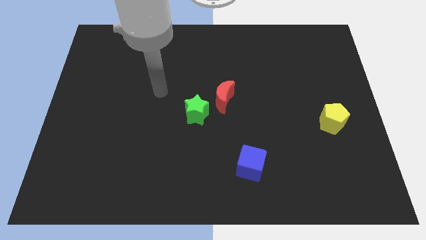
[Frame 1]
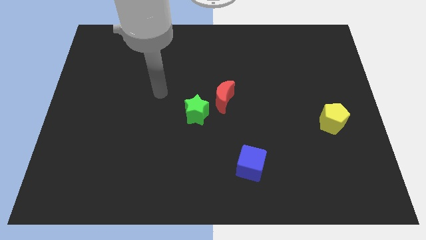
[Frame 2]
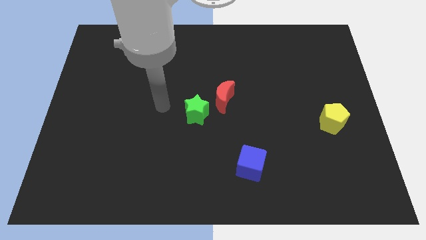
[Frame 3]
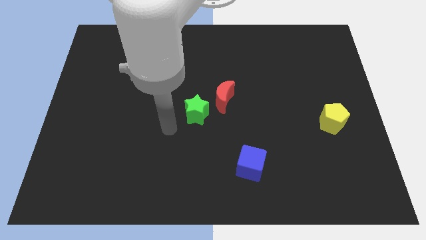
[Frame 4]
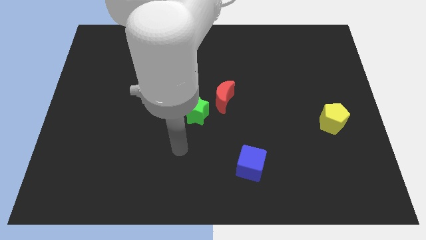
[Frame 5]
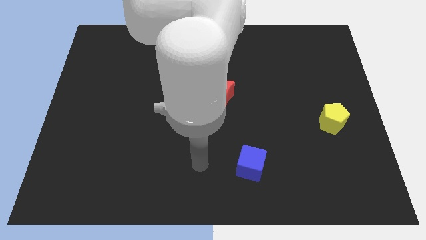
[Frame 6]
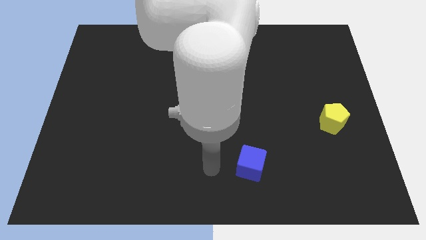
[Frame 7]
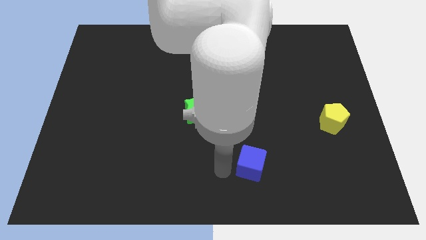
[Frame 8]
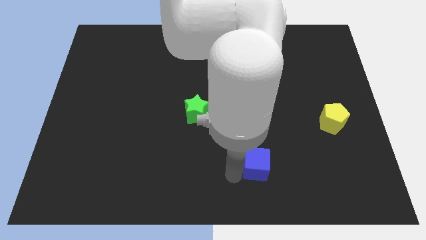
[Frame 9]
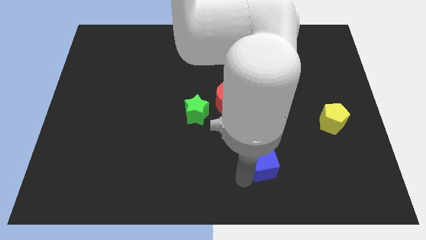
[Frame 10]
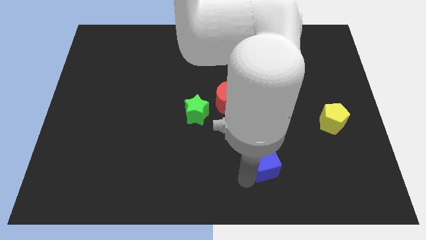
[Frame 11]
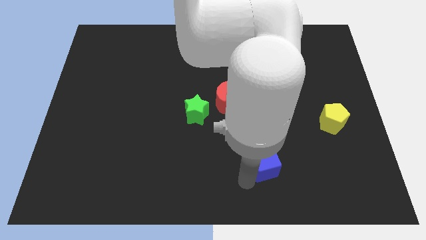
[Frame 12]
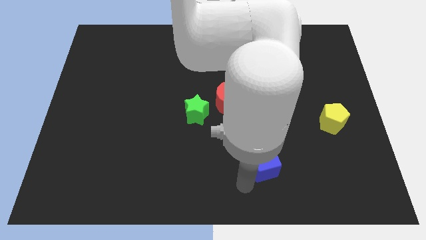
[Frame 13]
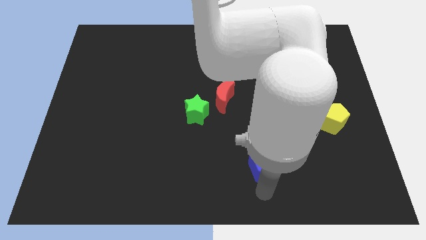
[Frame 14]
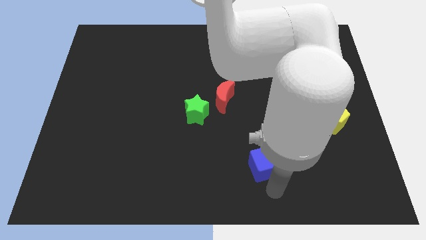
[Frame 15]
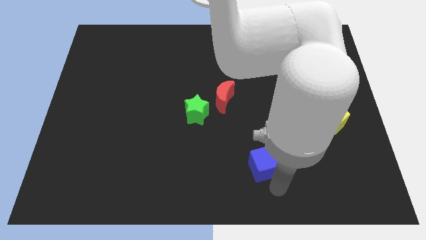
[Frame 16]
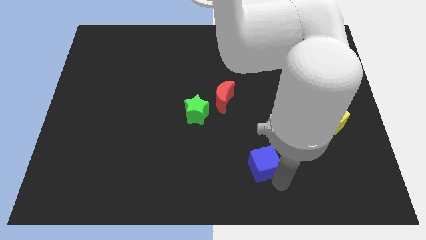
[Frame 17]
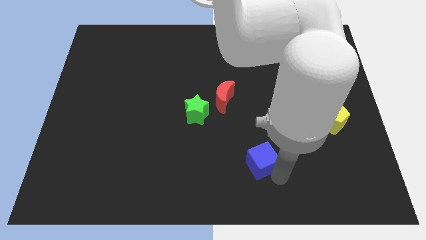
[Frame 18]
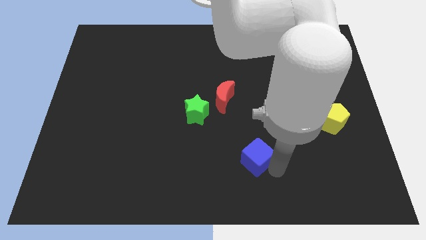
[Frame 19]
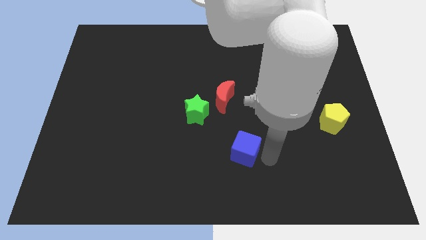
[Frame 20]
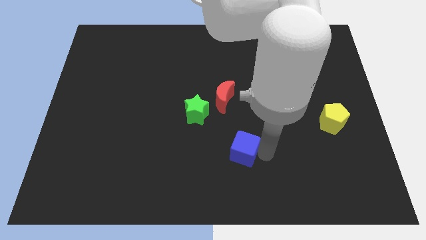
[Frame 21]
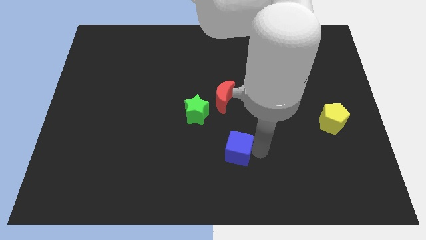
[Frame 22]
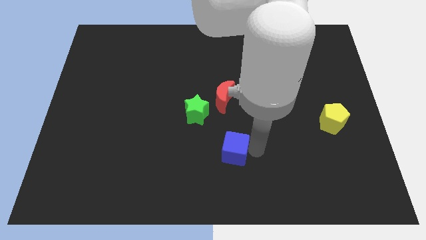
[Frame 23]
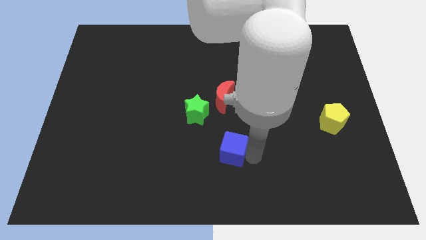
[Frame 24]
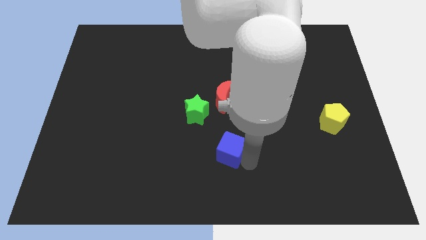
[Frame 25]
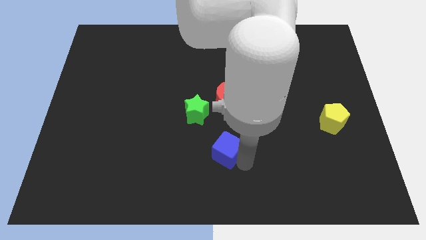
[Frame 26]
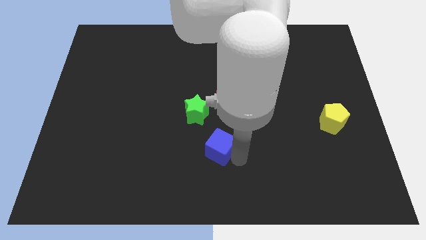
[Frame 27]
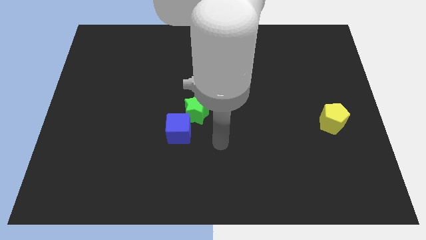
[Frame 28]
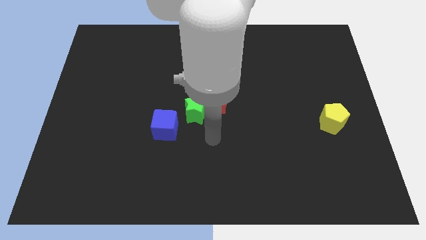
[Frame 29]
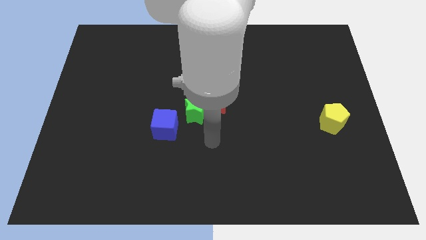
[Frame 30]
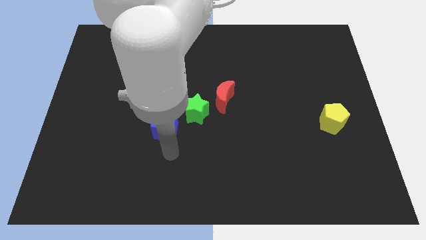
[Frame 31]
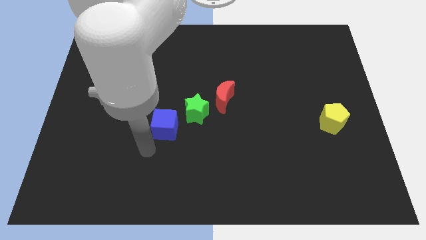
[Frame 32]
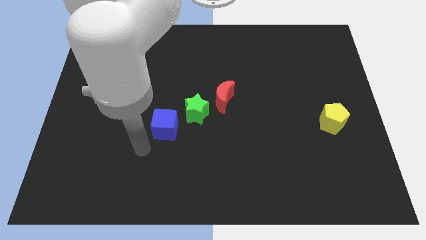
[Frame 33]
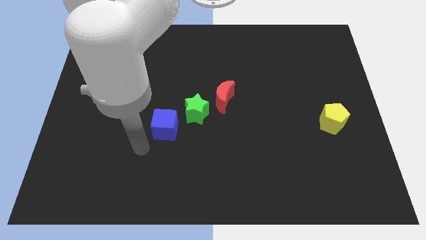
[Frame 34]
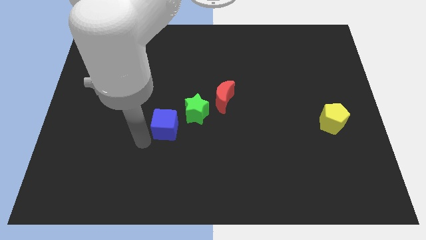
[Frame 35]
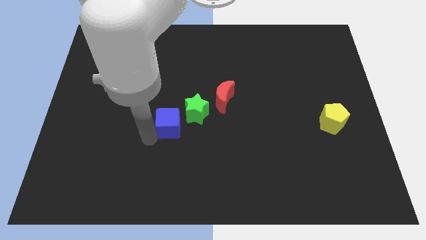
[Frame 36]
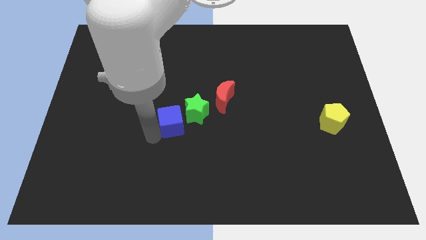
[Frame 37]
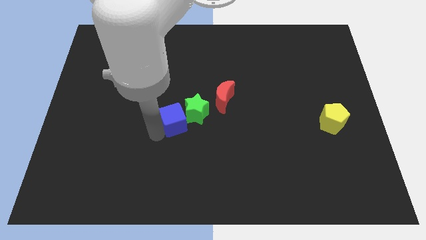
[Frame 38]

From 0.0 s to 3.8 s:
push the blue block close to the star

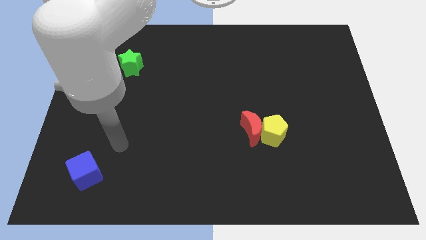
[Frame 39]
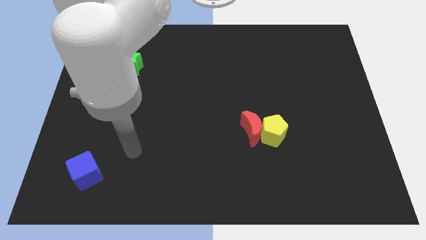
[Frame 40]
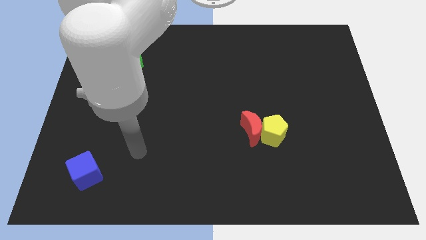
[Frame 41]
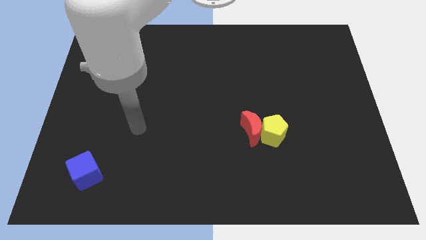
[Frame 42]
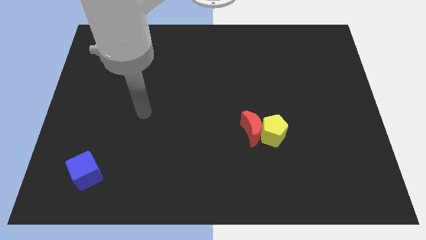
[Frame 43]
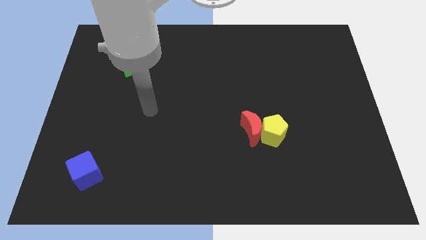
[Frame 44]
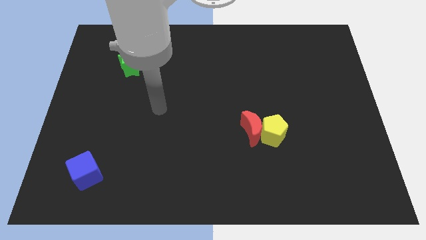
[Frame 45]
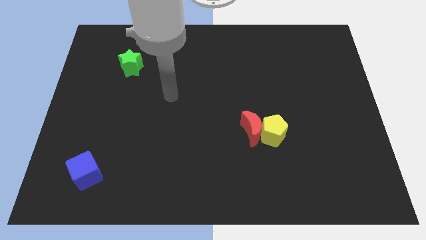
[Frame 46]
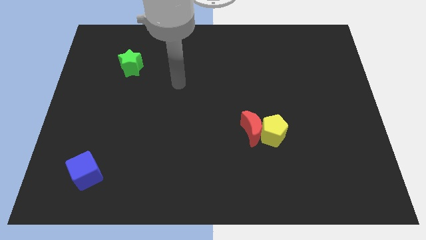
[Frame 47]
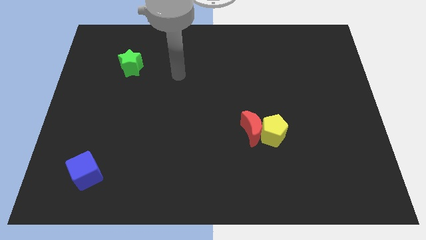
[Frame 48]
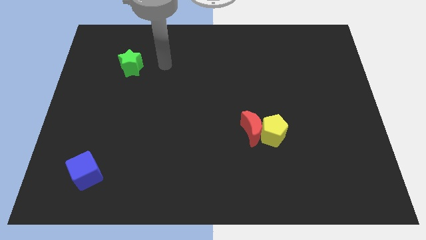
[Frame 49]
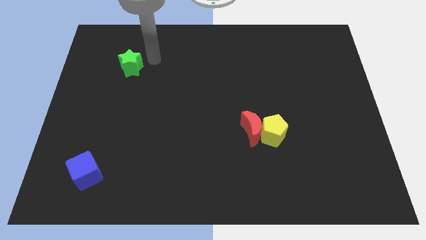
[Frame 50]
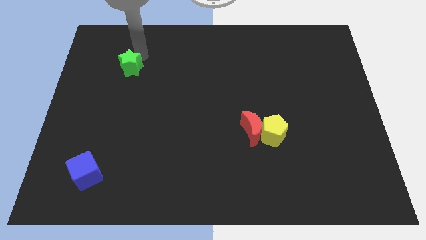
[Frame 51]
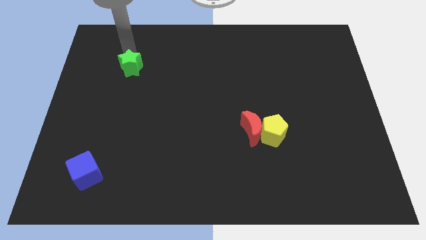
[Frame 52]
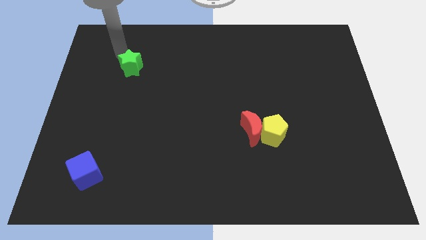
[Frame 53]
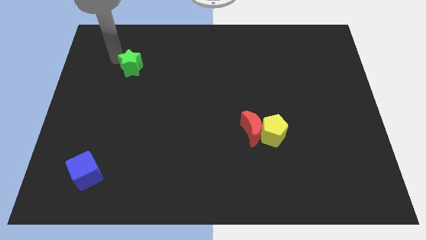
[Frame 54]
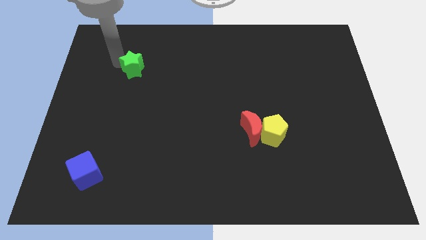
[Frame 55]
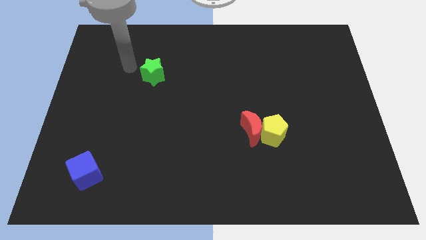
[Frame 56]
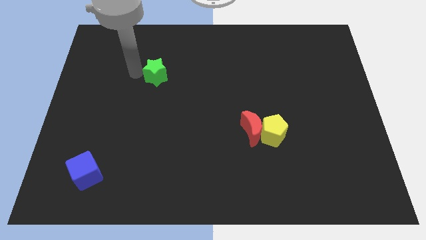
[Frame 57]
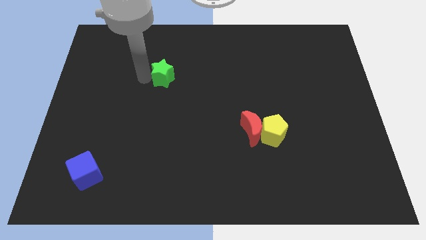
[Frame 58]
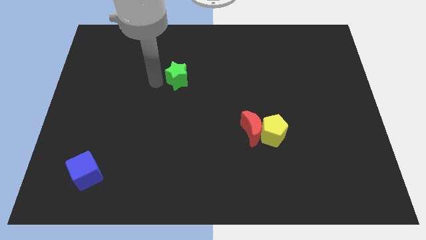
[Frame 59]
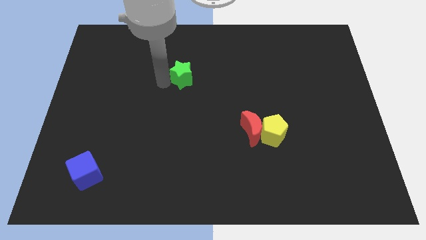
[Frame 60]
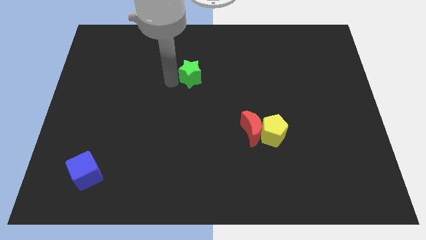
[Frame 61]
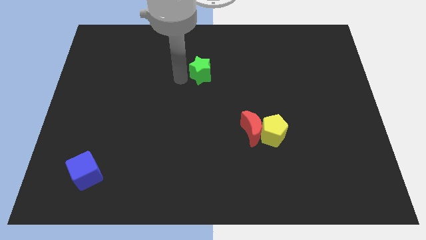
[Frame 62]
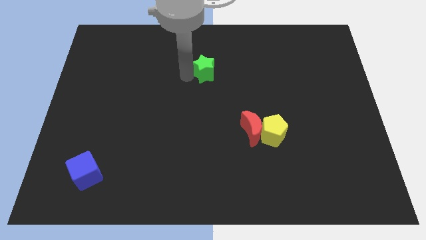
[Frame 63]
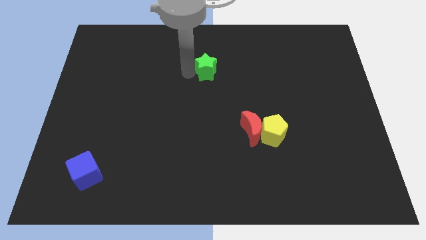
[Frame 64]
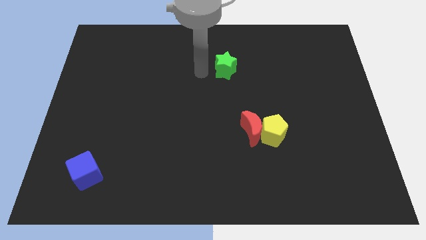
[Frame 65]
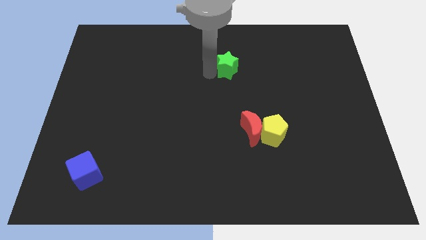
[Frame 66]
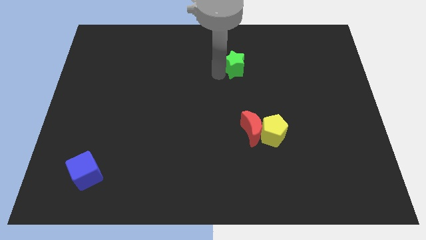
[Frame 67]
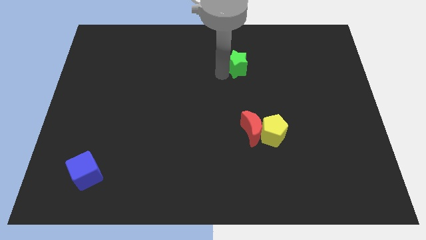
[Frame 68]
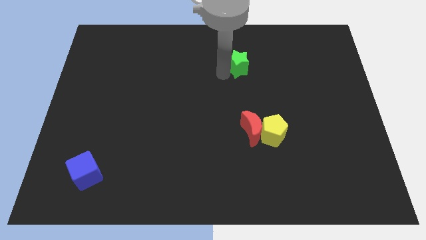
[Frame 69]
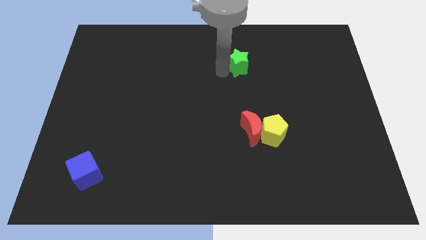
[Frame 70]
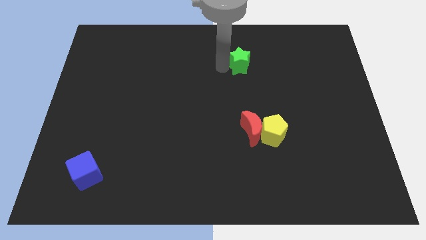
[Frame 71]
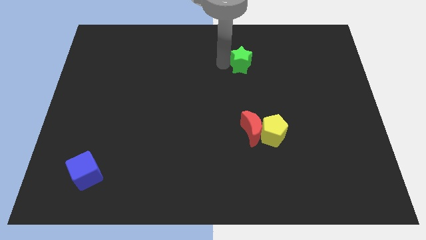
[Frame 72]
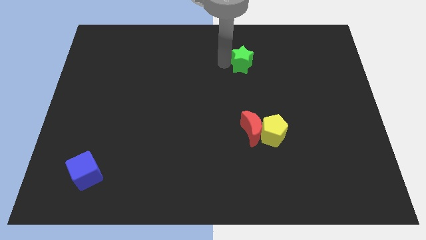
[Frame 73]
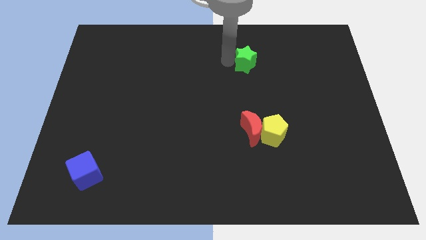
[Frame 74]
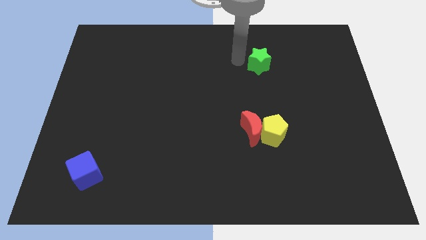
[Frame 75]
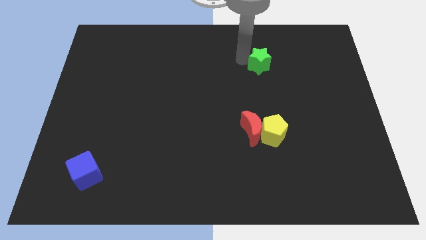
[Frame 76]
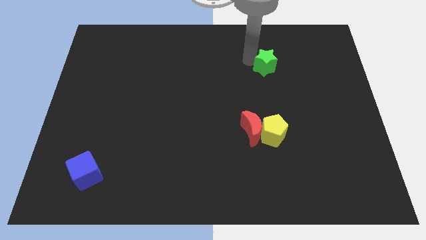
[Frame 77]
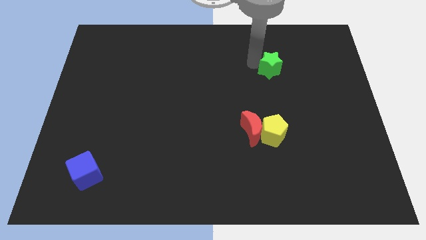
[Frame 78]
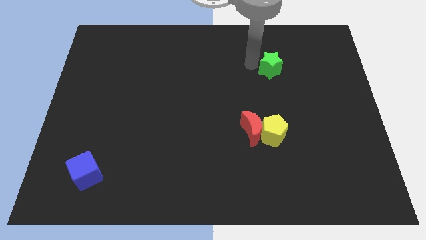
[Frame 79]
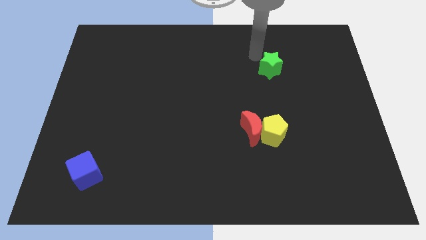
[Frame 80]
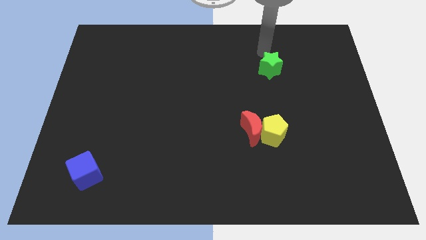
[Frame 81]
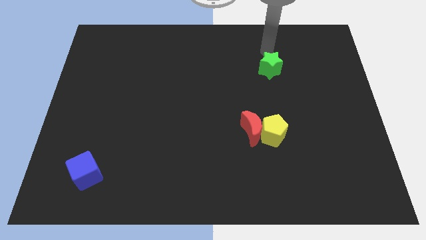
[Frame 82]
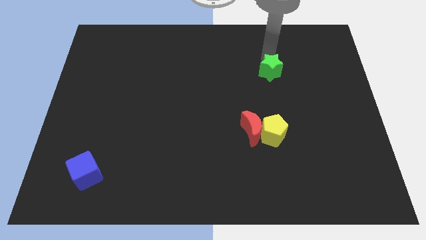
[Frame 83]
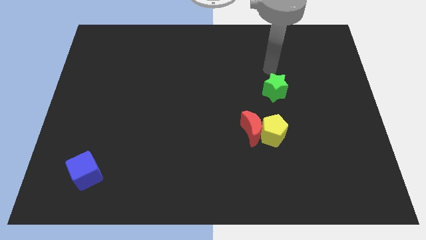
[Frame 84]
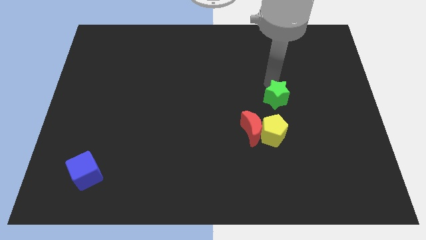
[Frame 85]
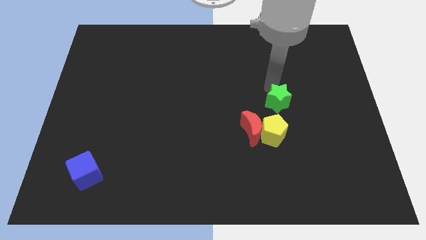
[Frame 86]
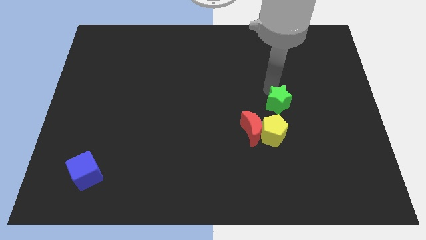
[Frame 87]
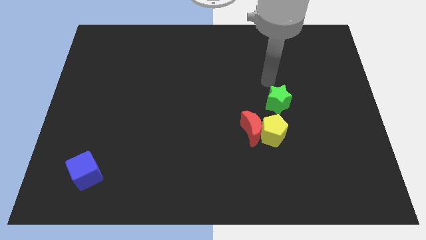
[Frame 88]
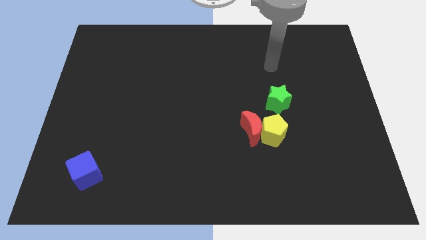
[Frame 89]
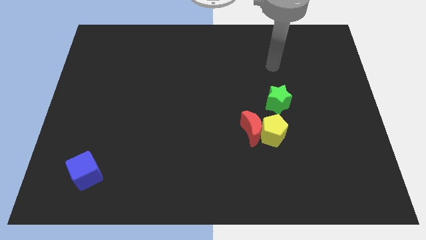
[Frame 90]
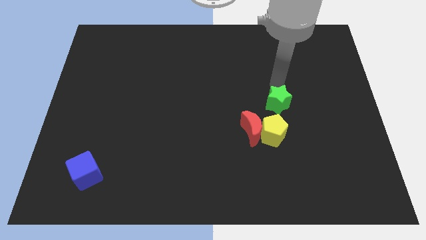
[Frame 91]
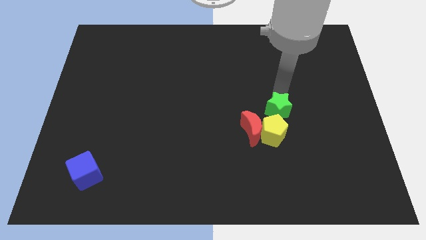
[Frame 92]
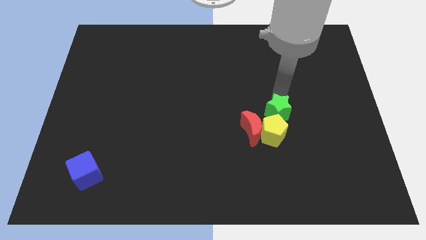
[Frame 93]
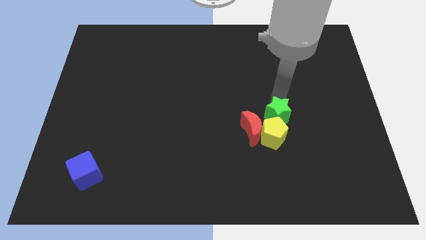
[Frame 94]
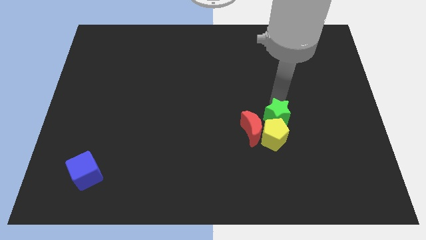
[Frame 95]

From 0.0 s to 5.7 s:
put the star to the yellow pentagon
